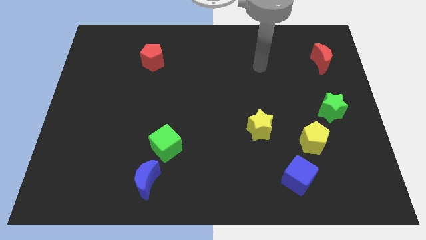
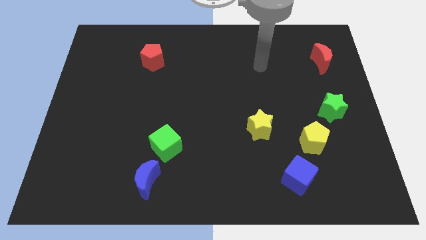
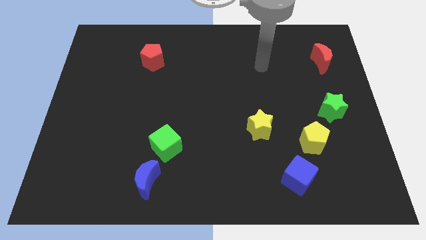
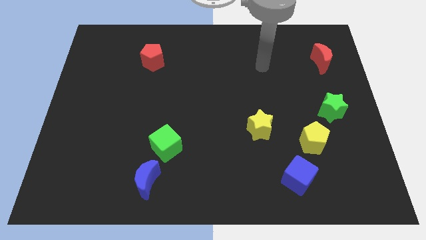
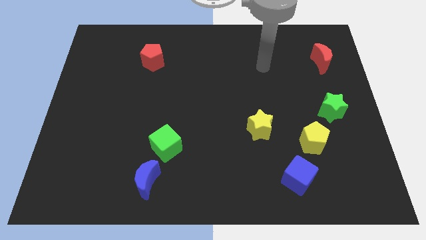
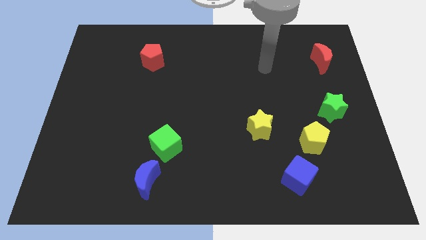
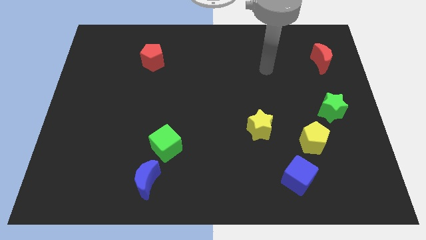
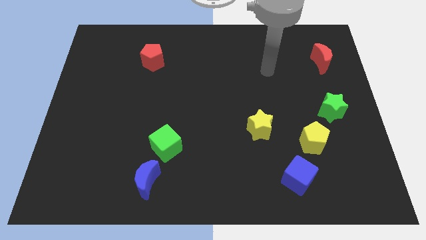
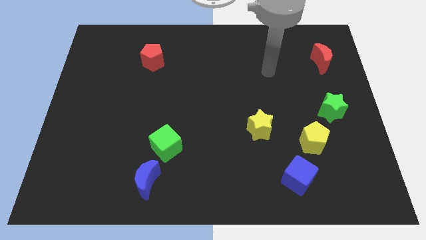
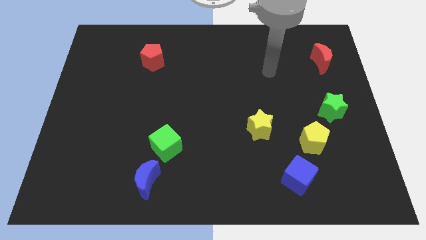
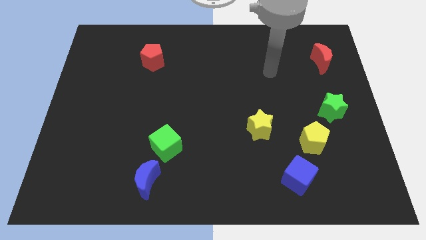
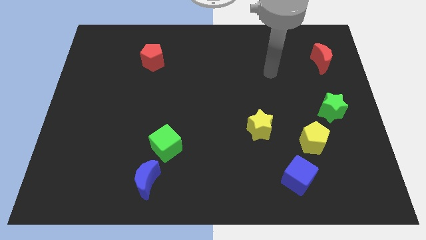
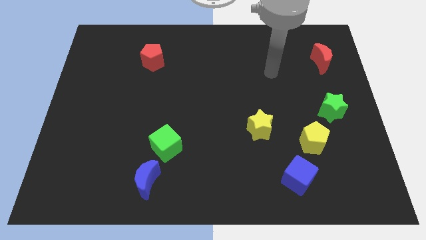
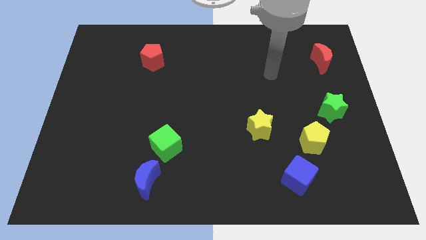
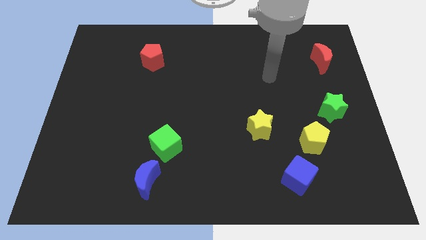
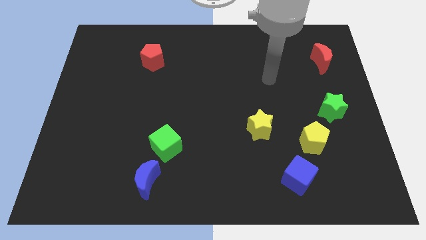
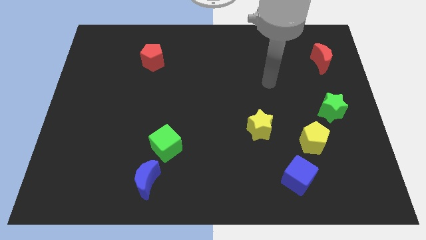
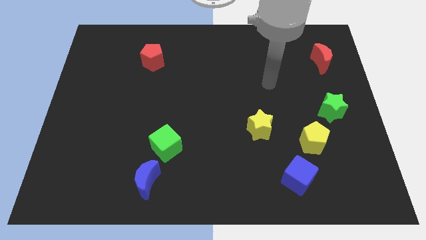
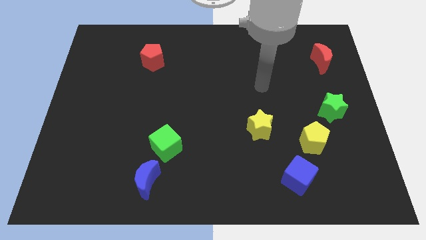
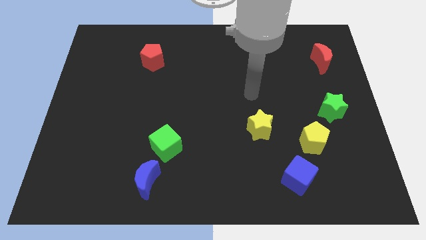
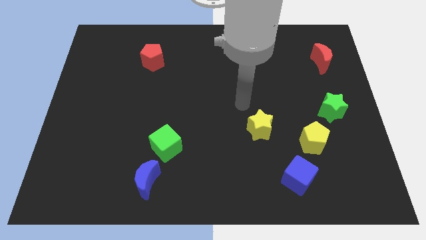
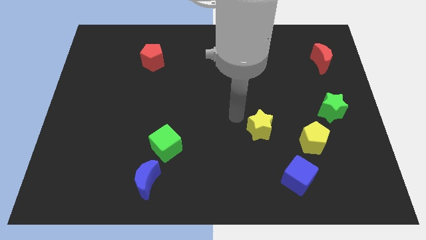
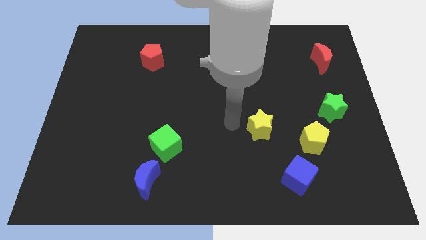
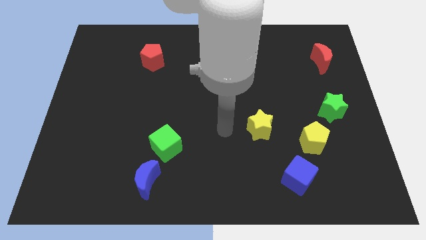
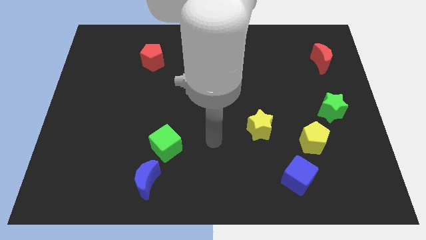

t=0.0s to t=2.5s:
move your arm to the left of the yellow star

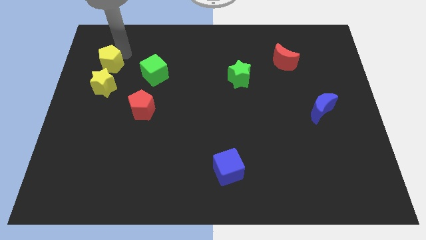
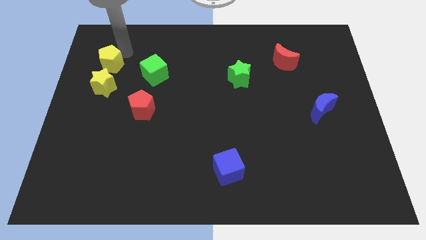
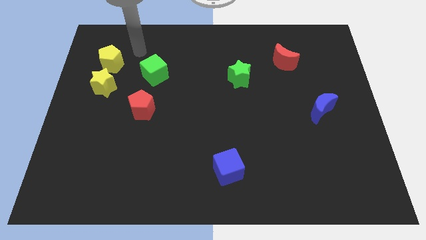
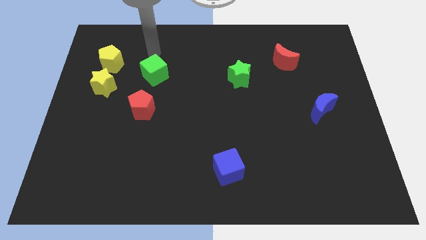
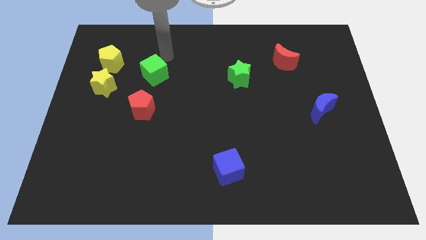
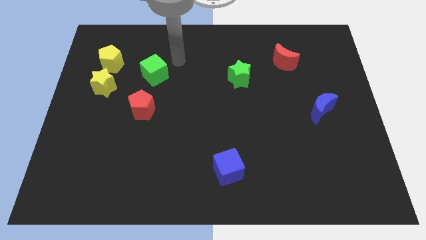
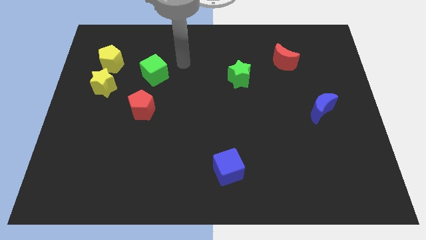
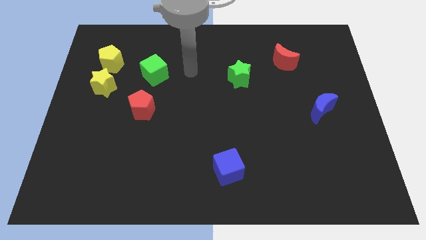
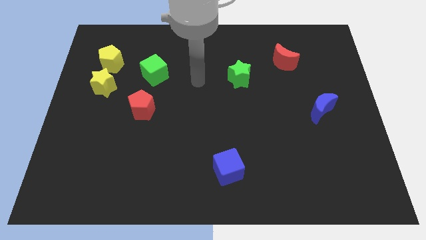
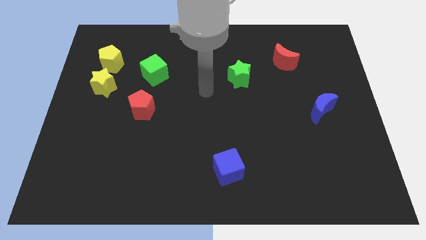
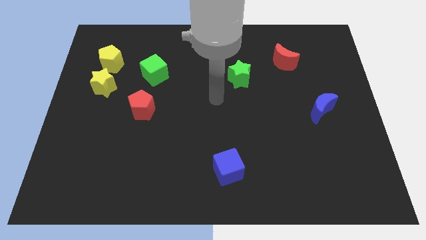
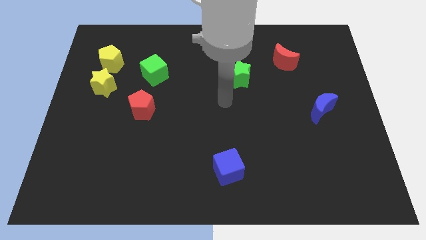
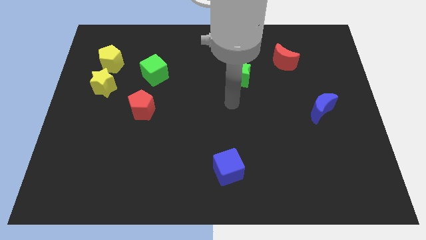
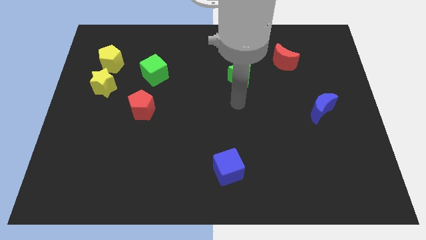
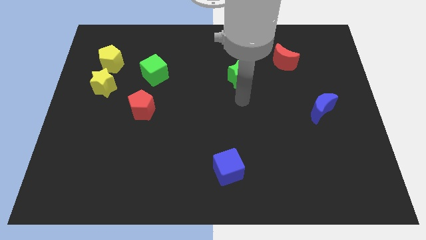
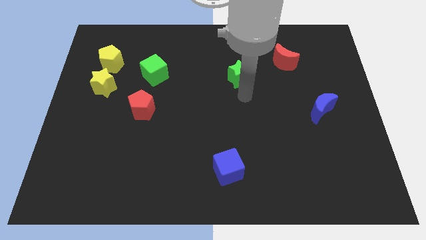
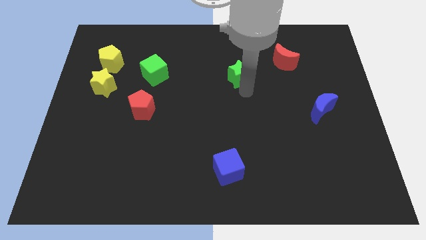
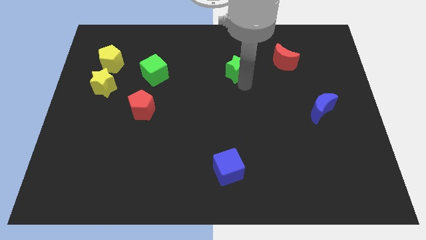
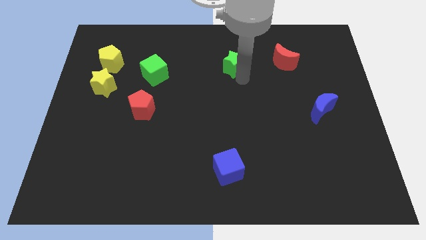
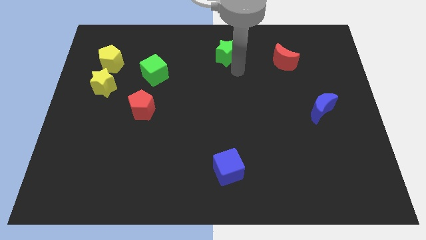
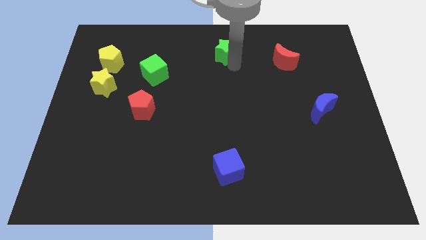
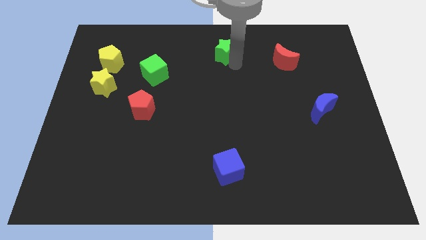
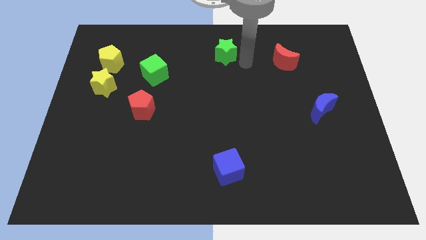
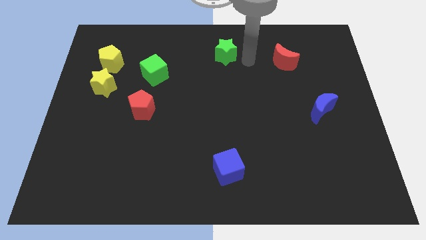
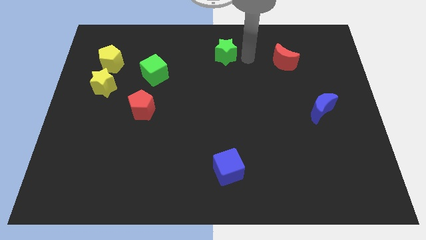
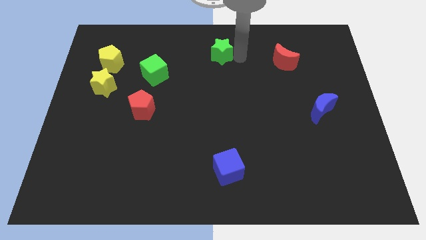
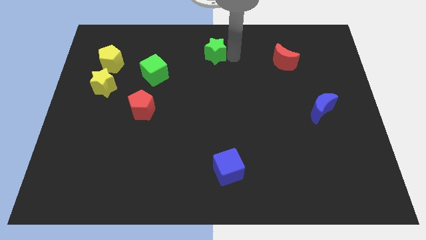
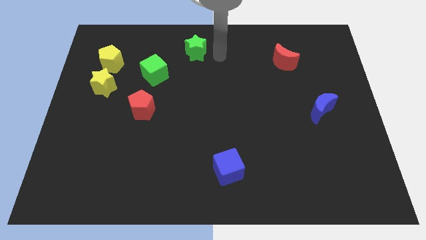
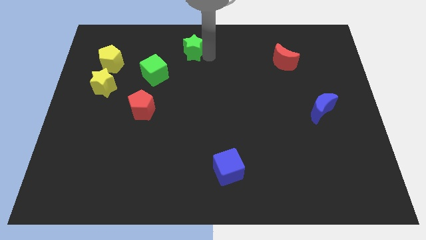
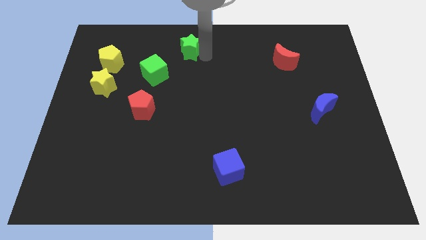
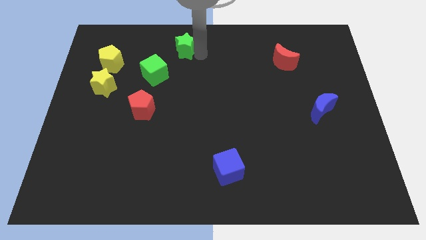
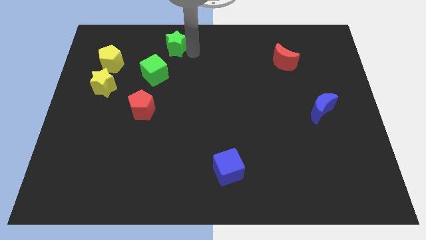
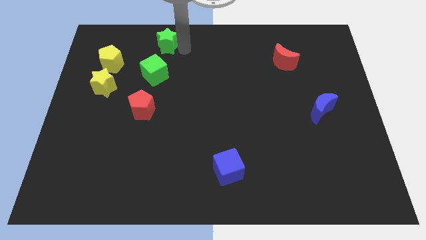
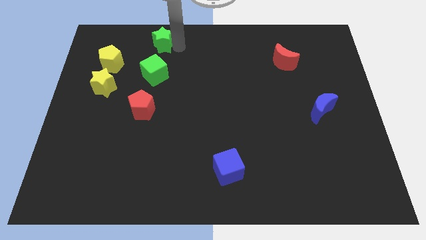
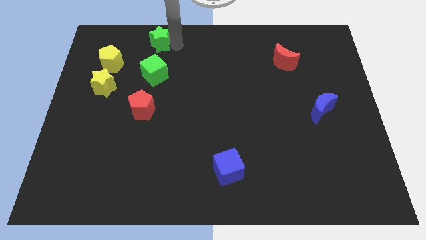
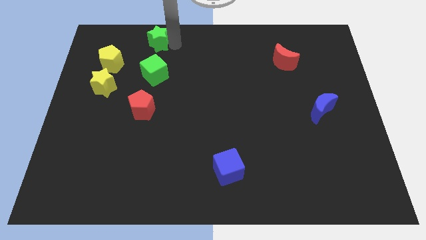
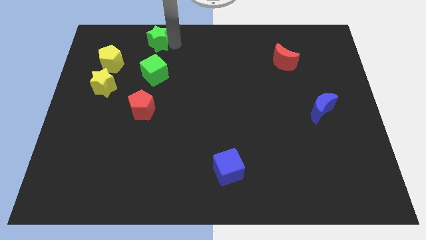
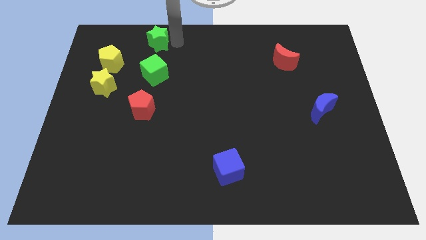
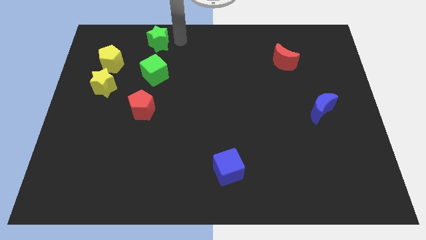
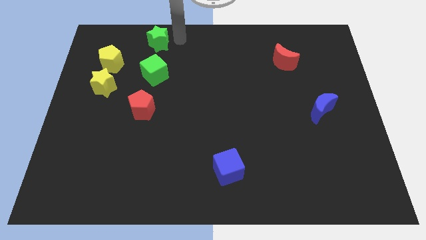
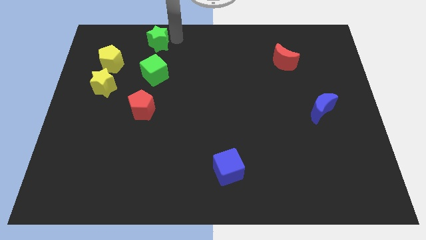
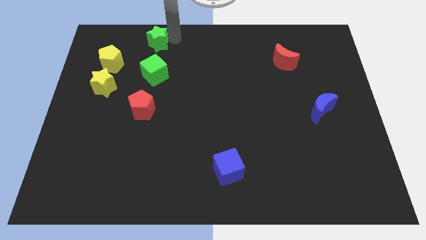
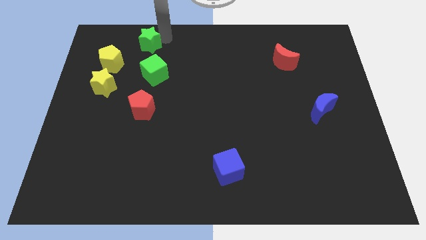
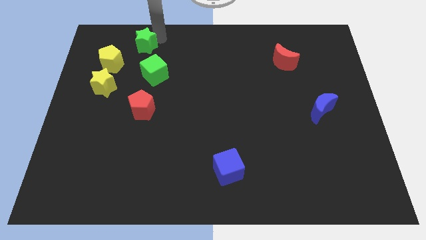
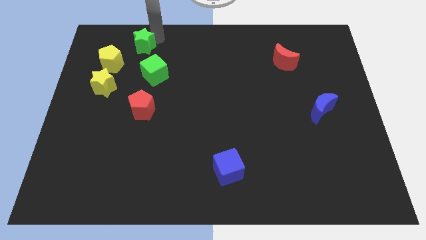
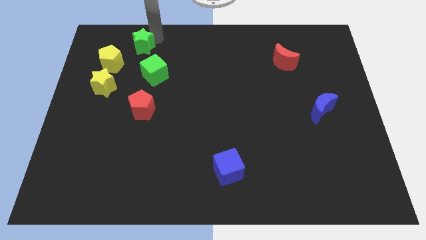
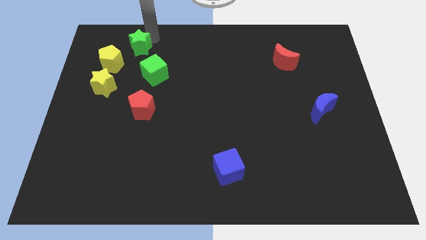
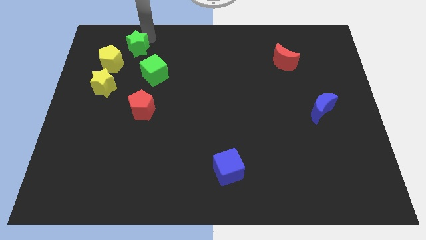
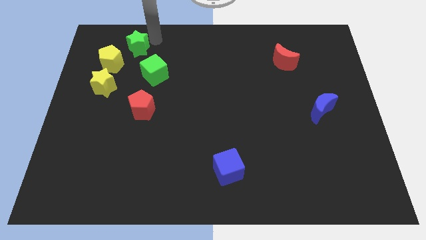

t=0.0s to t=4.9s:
move the green star to the right side of the yellow pentagon left top of the board

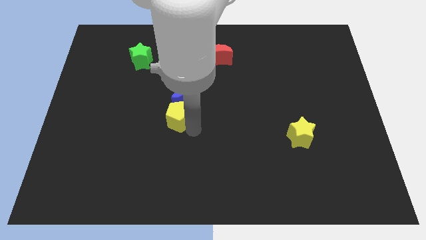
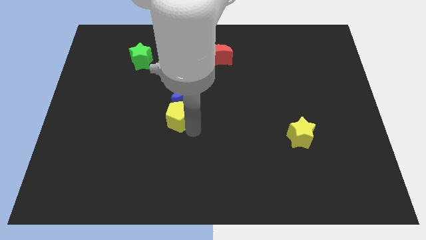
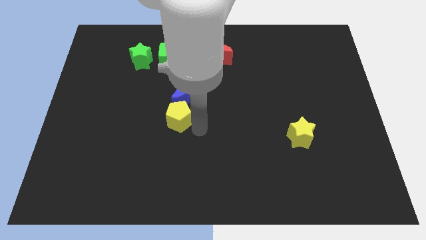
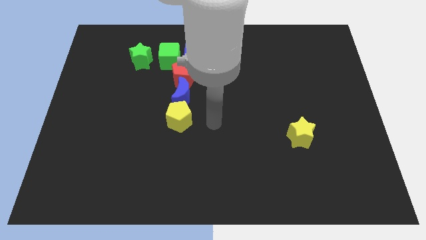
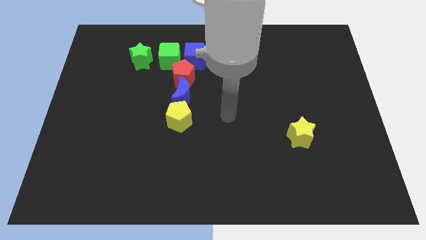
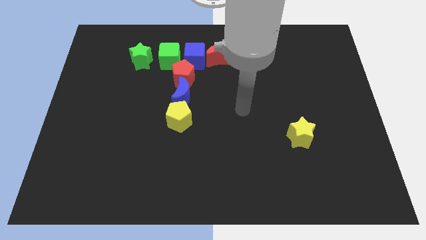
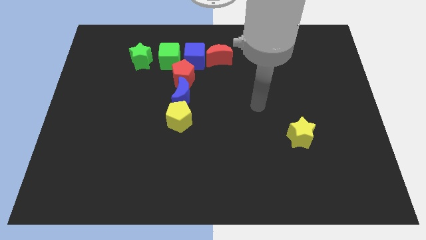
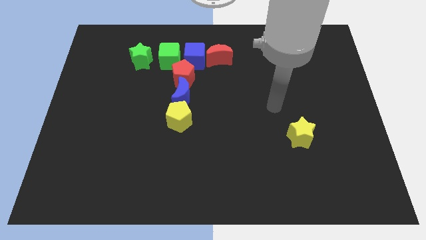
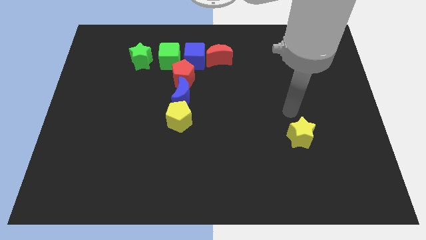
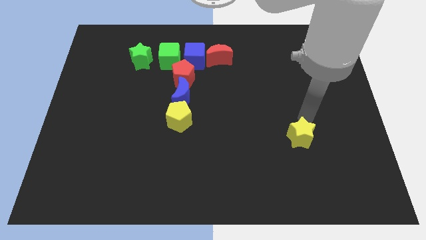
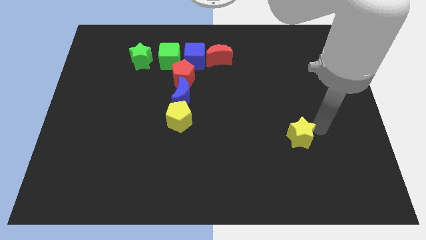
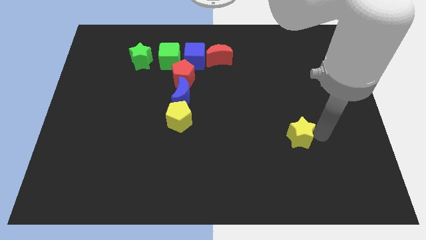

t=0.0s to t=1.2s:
move your hand towards the right of the yellow star

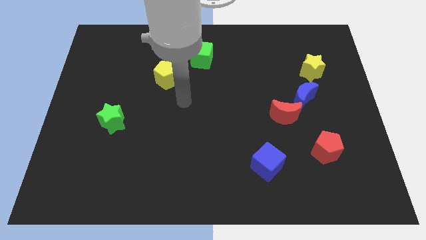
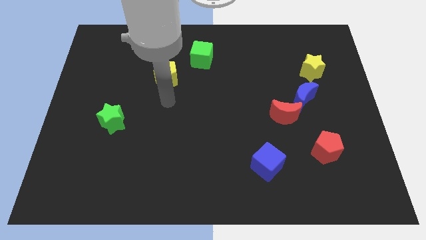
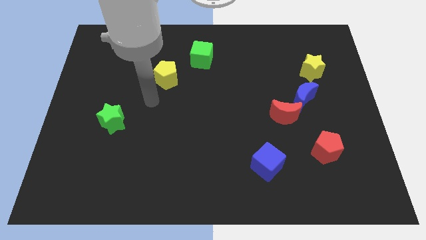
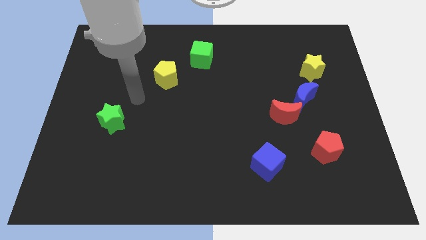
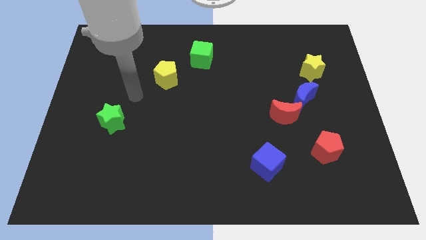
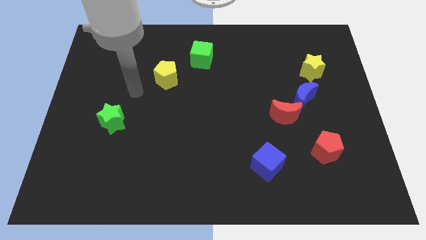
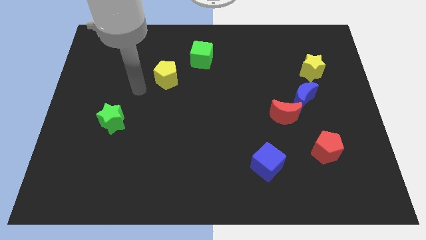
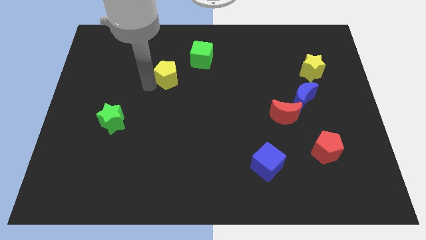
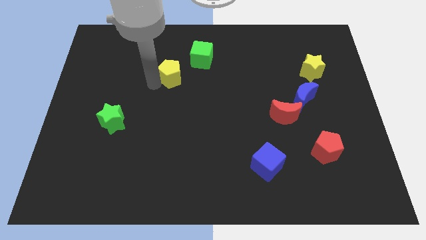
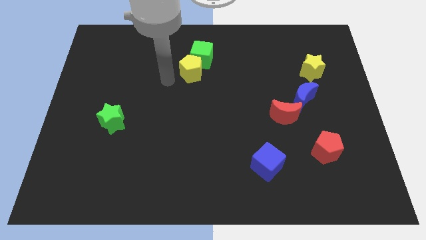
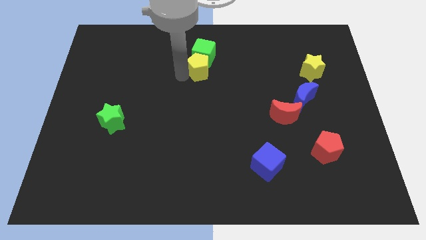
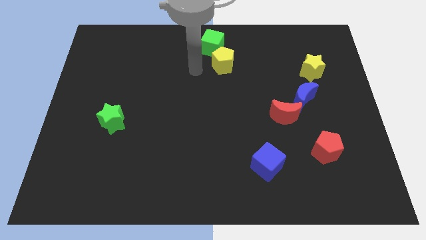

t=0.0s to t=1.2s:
move the yellow pentagon to the bottom of the green cube
